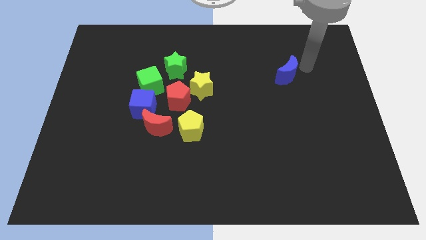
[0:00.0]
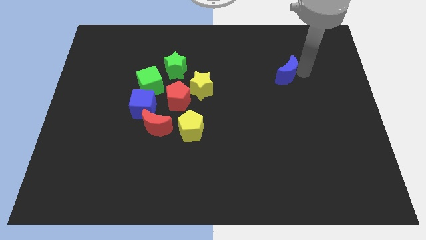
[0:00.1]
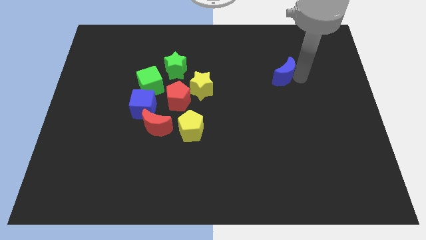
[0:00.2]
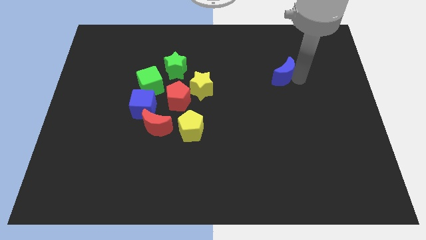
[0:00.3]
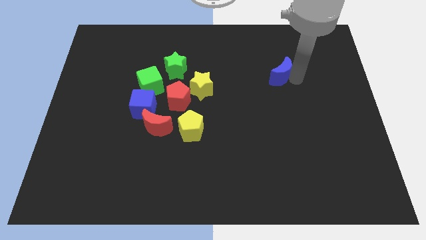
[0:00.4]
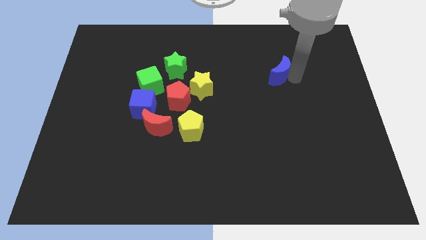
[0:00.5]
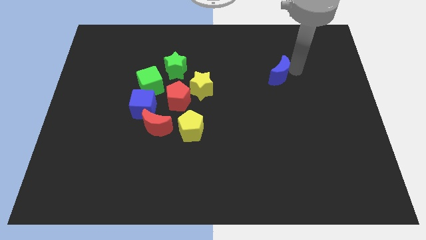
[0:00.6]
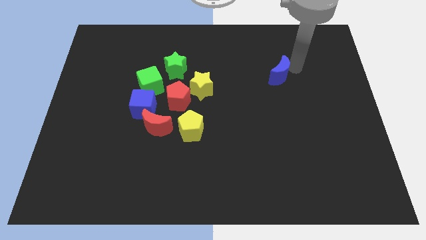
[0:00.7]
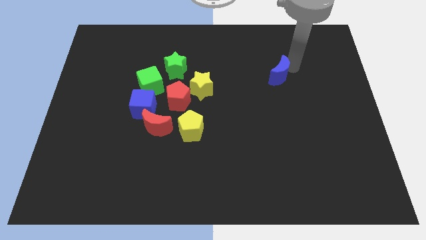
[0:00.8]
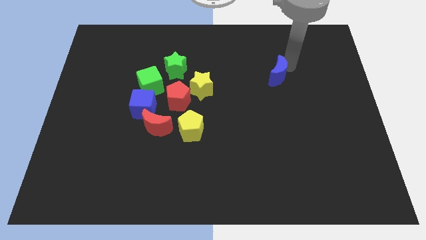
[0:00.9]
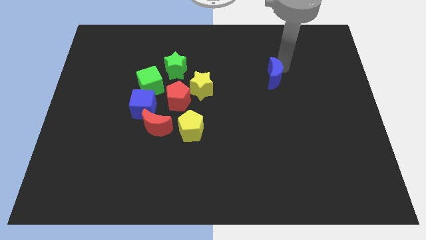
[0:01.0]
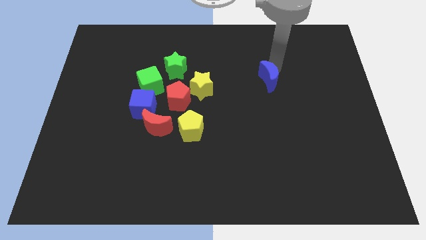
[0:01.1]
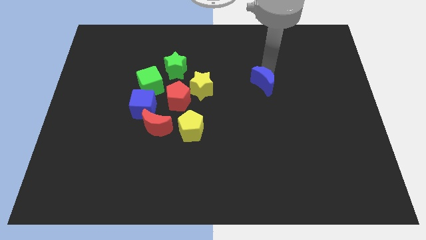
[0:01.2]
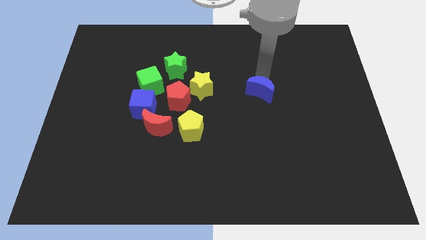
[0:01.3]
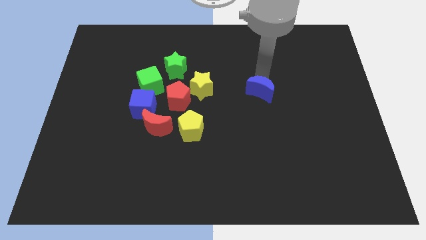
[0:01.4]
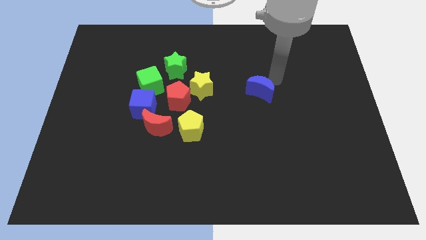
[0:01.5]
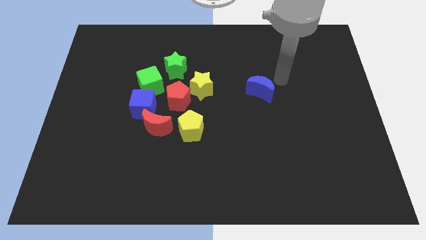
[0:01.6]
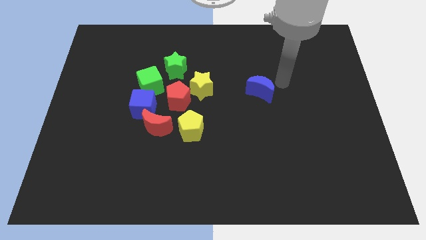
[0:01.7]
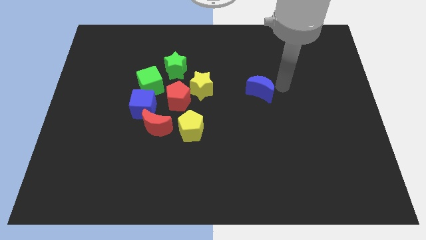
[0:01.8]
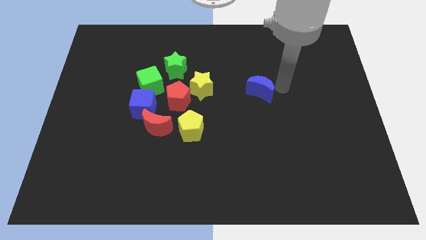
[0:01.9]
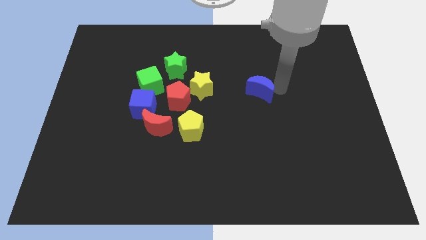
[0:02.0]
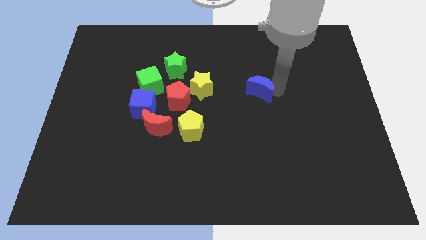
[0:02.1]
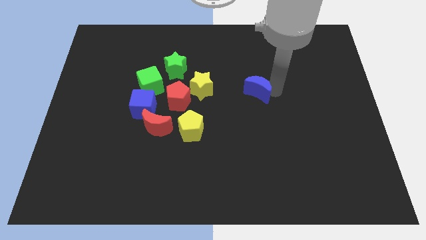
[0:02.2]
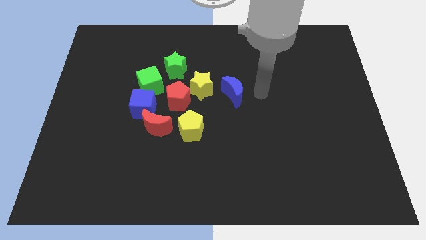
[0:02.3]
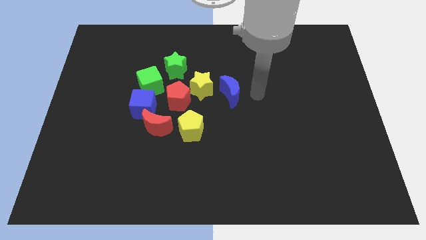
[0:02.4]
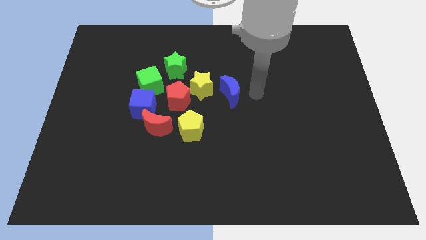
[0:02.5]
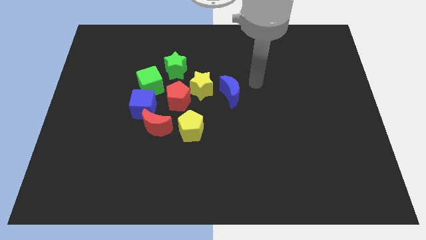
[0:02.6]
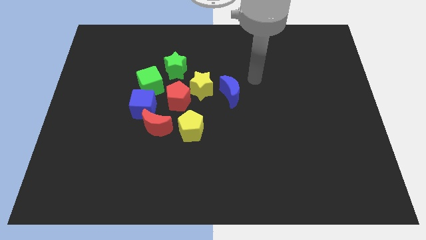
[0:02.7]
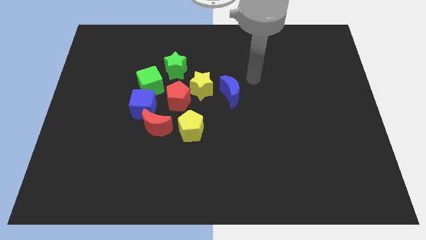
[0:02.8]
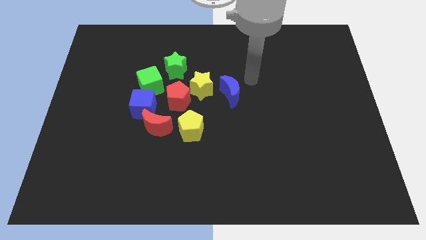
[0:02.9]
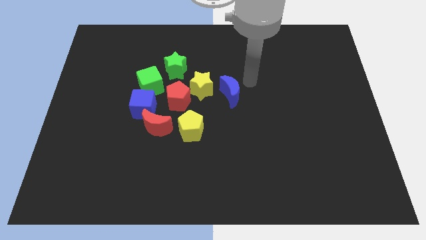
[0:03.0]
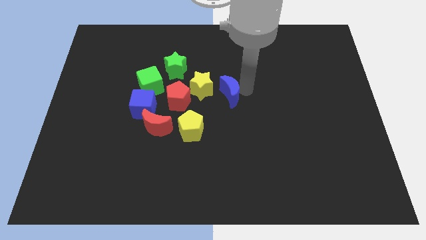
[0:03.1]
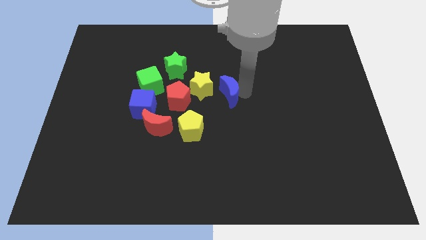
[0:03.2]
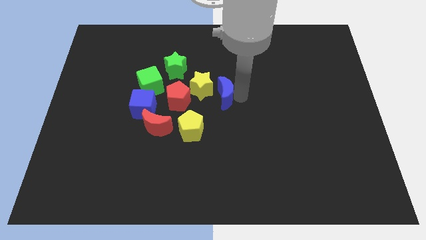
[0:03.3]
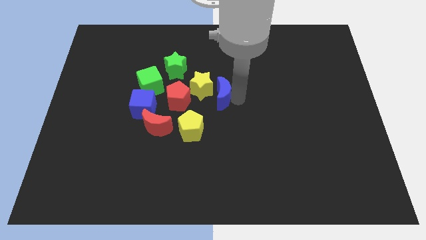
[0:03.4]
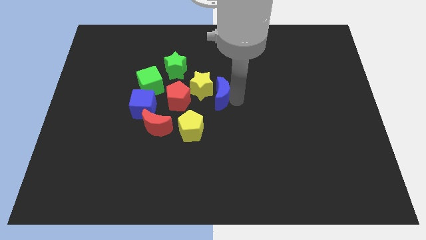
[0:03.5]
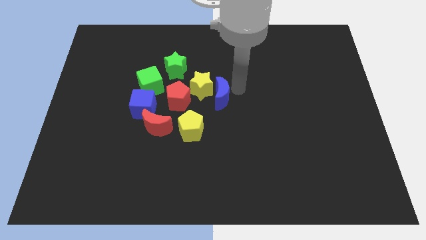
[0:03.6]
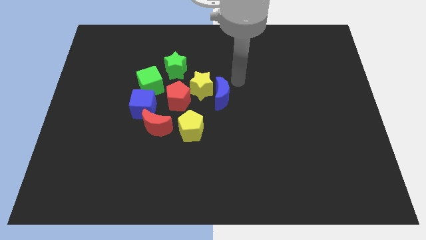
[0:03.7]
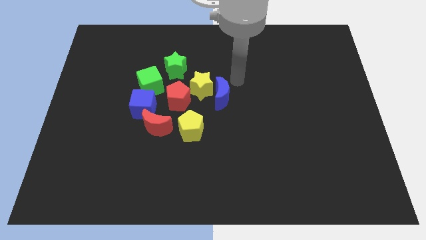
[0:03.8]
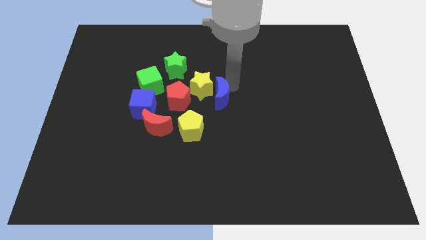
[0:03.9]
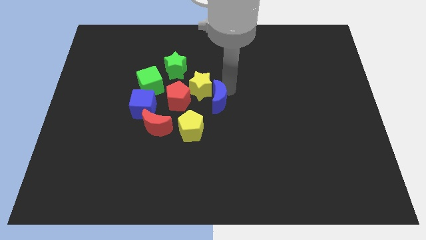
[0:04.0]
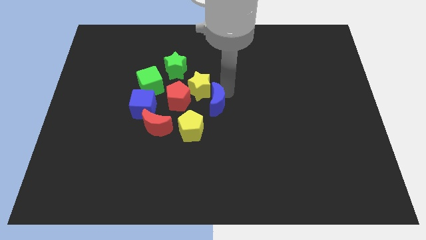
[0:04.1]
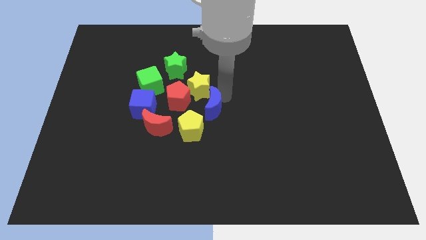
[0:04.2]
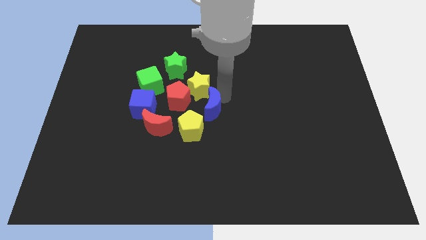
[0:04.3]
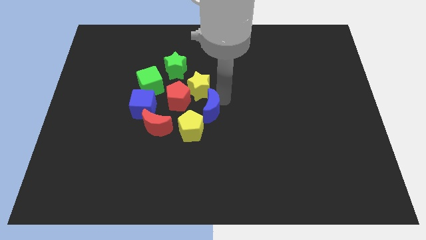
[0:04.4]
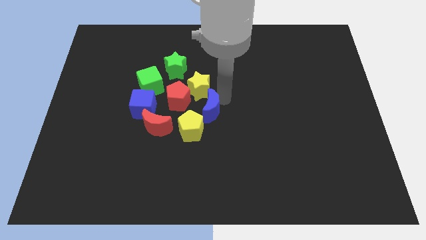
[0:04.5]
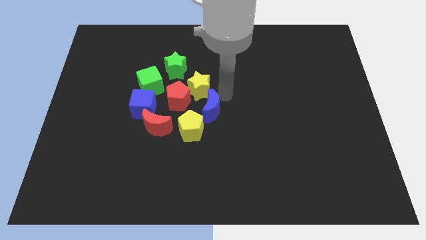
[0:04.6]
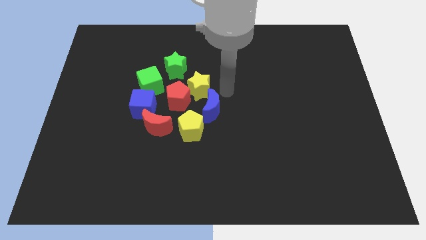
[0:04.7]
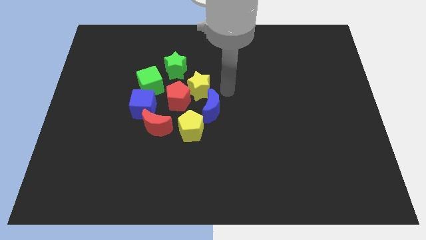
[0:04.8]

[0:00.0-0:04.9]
place the blue crescent horizontally to the right side of the blue cube

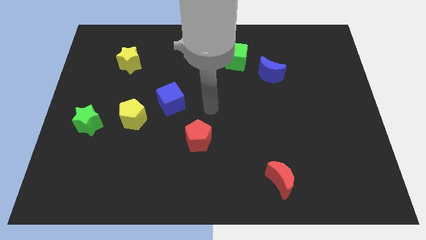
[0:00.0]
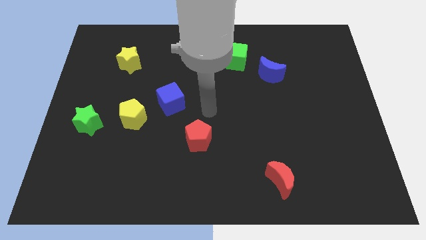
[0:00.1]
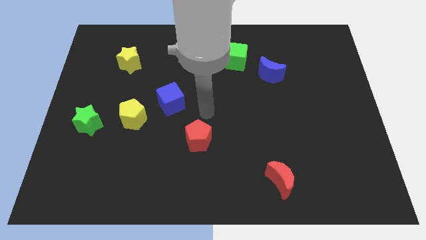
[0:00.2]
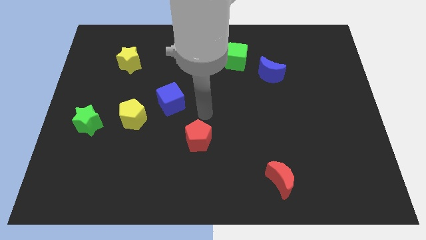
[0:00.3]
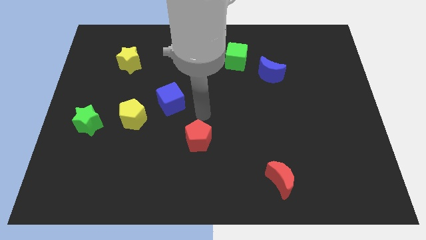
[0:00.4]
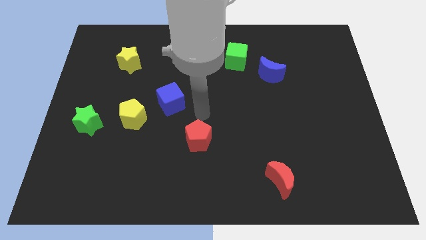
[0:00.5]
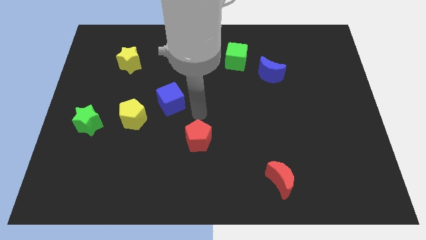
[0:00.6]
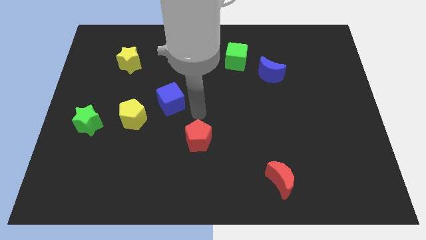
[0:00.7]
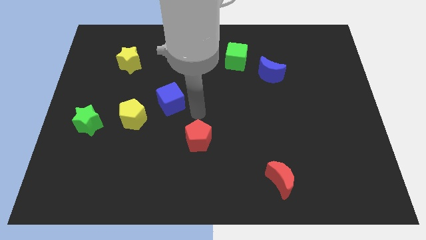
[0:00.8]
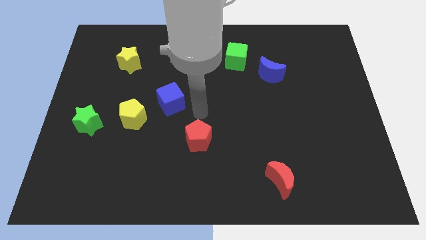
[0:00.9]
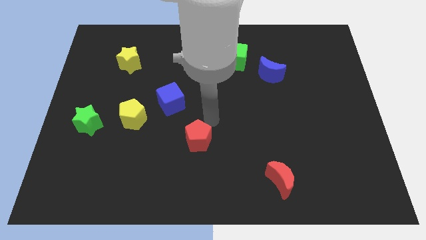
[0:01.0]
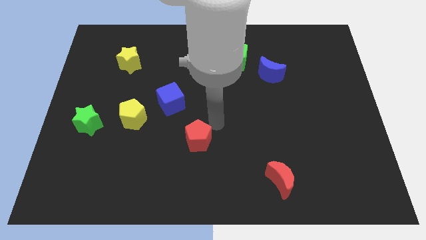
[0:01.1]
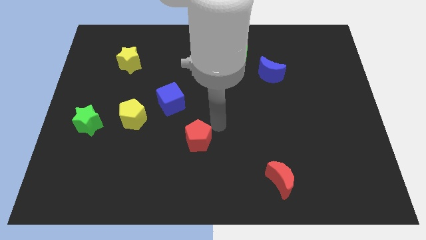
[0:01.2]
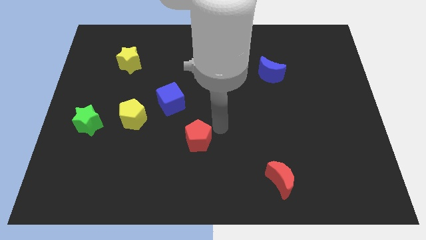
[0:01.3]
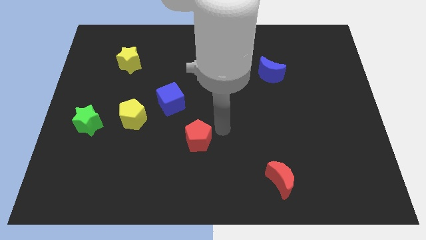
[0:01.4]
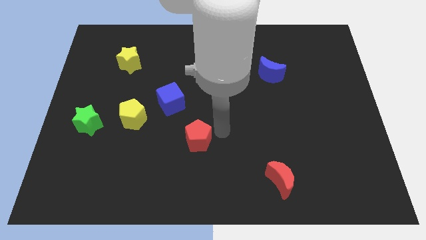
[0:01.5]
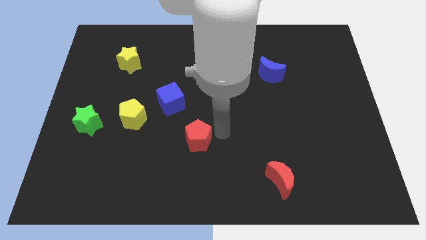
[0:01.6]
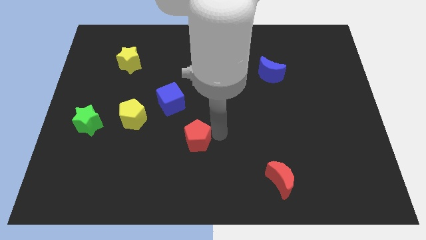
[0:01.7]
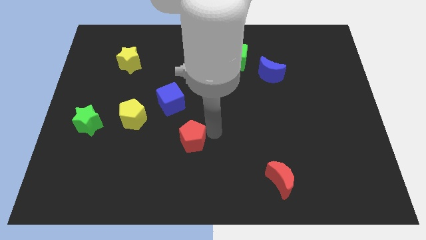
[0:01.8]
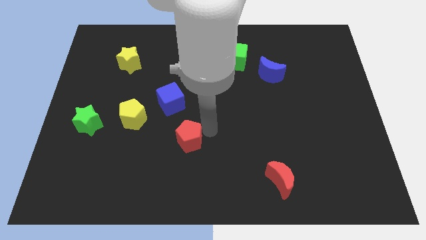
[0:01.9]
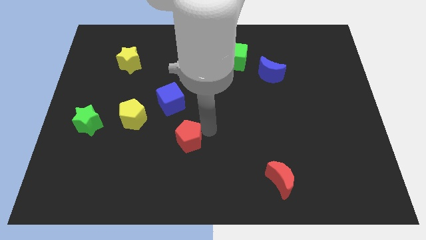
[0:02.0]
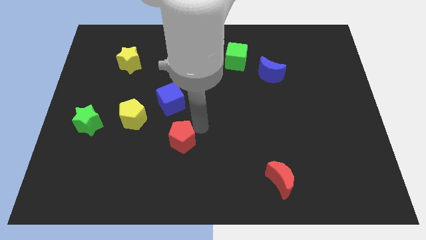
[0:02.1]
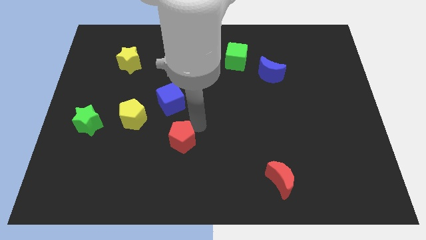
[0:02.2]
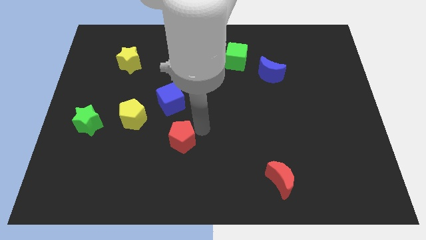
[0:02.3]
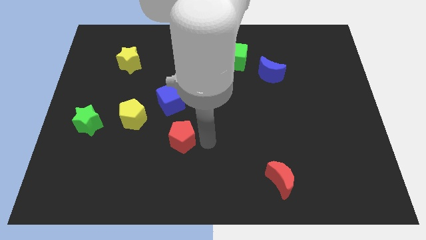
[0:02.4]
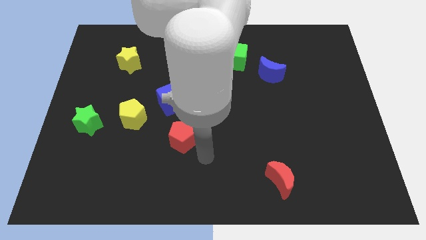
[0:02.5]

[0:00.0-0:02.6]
push red pentagon diagonally below yellow pentagon

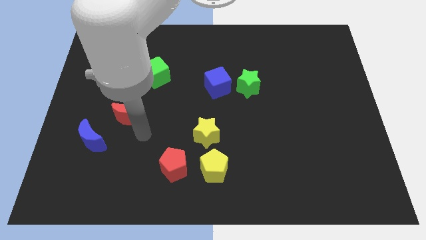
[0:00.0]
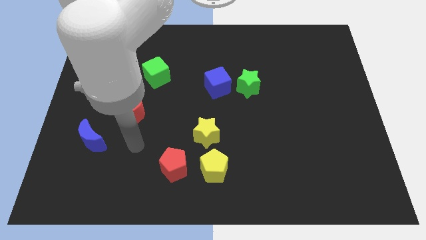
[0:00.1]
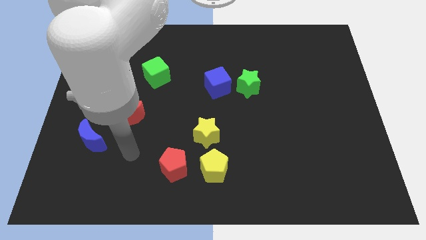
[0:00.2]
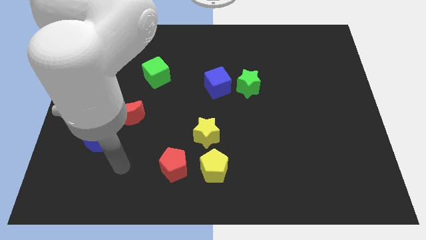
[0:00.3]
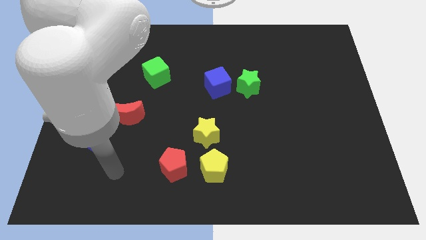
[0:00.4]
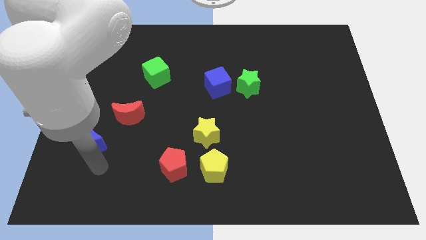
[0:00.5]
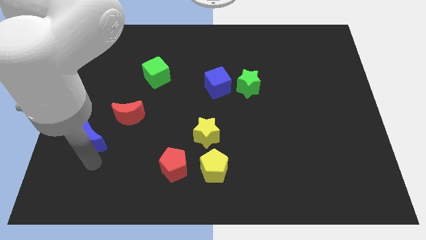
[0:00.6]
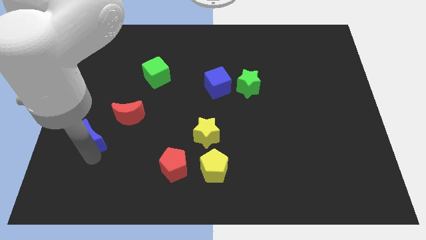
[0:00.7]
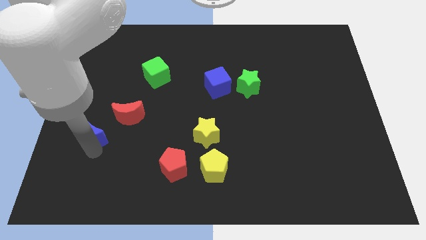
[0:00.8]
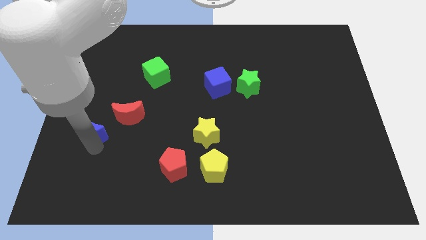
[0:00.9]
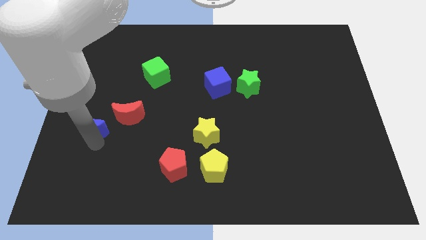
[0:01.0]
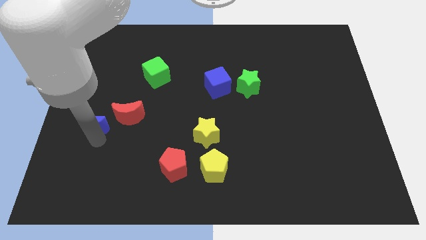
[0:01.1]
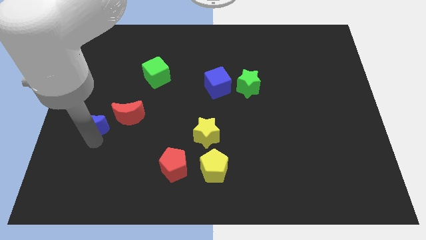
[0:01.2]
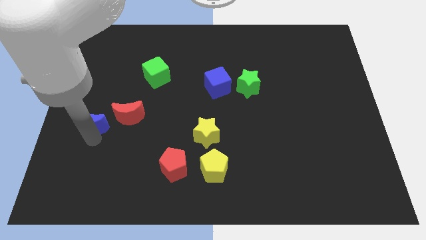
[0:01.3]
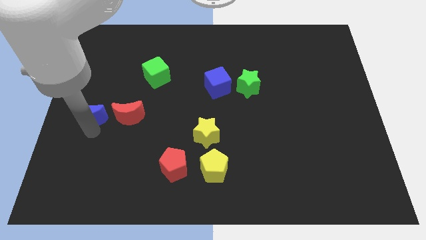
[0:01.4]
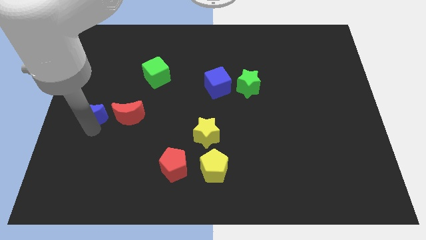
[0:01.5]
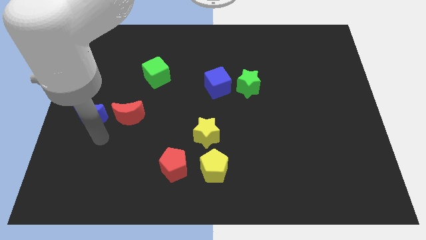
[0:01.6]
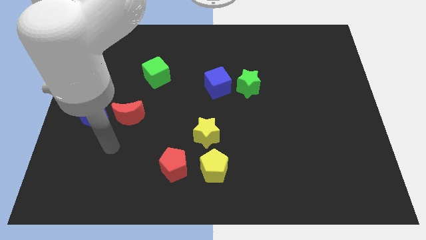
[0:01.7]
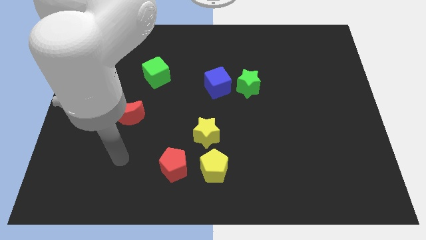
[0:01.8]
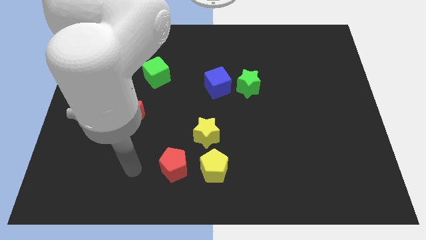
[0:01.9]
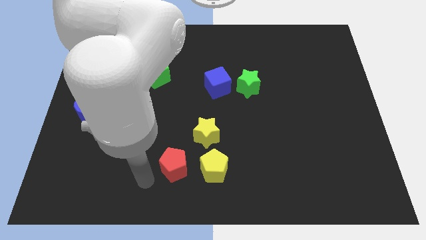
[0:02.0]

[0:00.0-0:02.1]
slide blue moon to left of red moon
